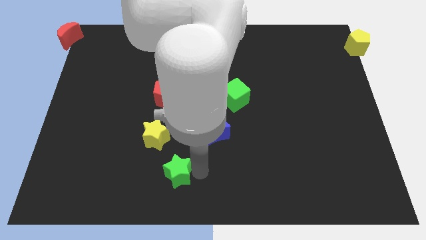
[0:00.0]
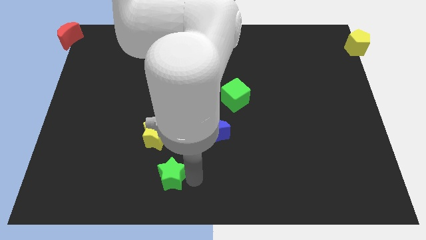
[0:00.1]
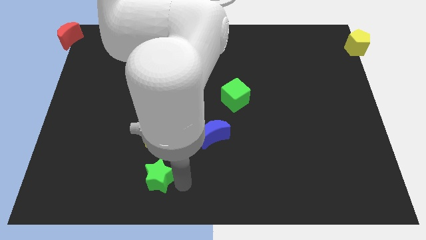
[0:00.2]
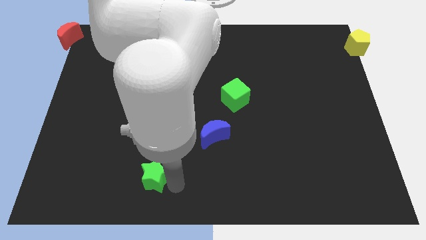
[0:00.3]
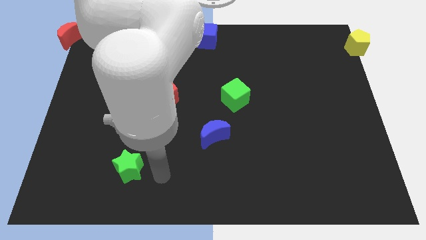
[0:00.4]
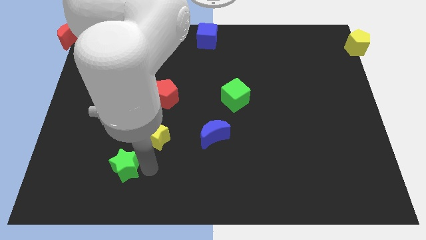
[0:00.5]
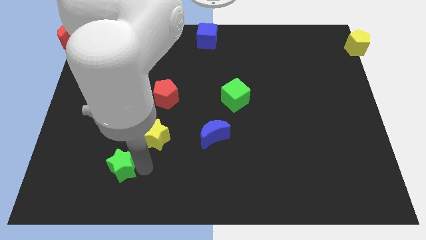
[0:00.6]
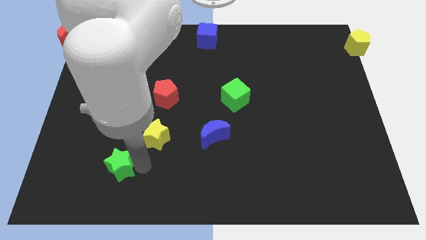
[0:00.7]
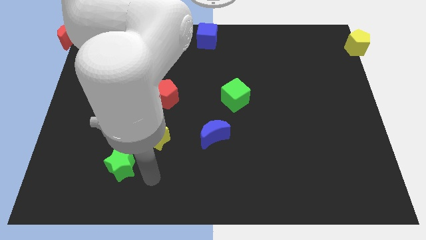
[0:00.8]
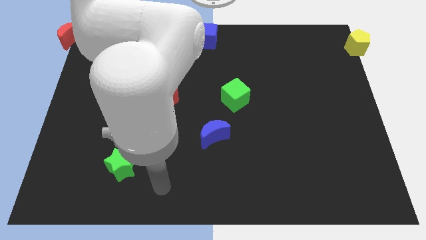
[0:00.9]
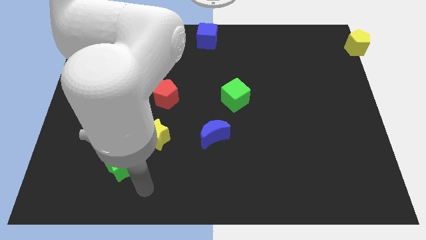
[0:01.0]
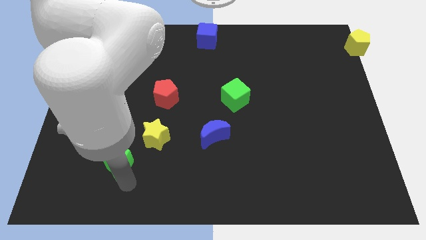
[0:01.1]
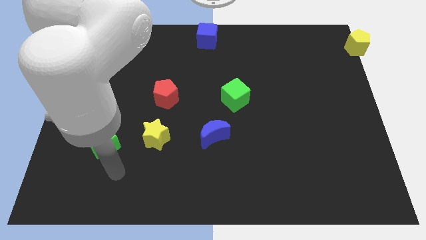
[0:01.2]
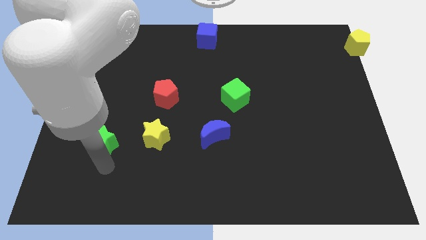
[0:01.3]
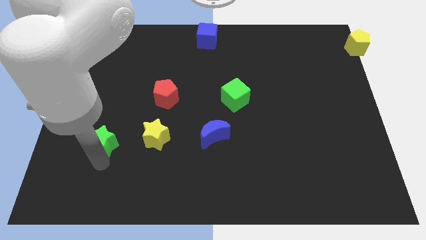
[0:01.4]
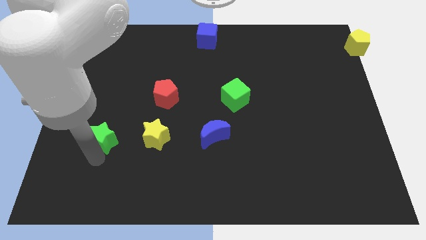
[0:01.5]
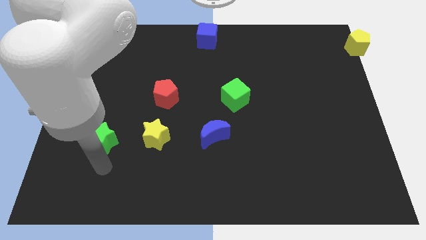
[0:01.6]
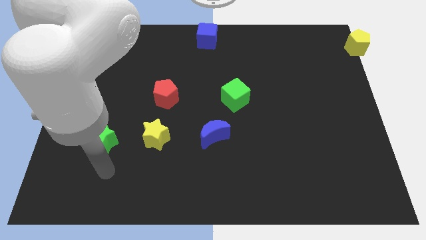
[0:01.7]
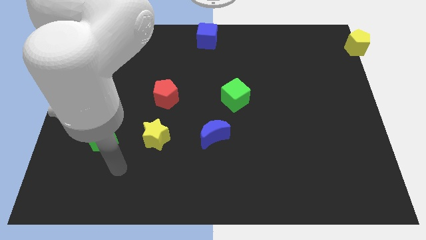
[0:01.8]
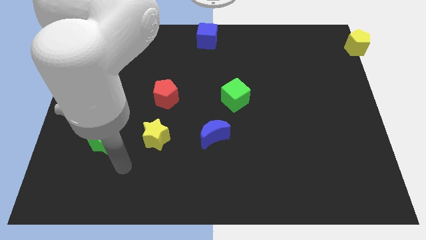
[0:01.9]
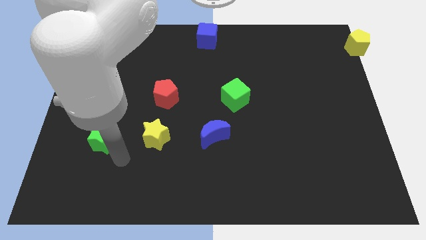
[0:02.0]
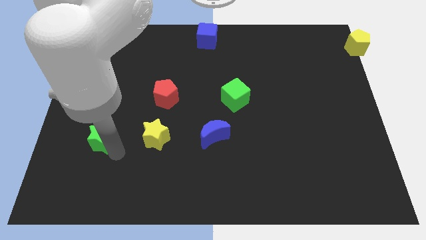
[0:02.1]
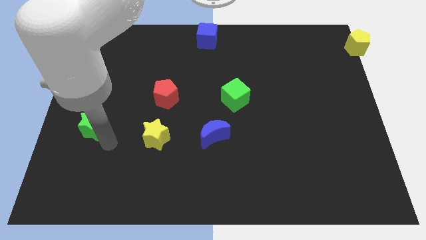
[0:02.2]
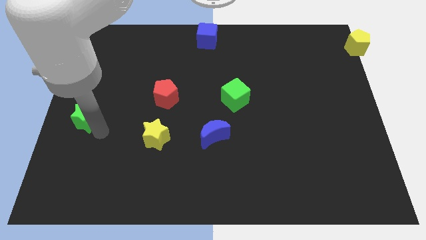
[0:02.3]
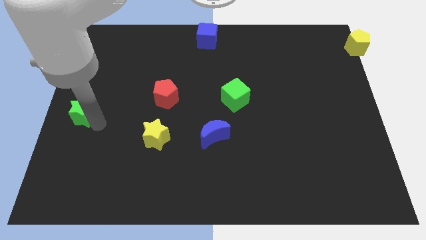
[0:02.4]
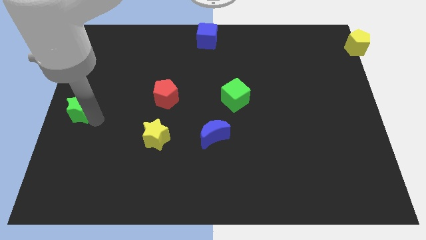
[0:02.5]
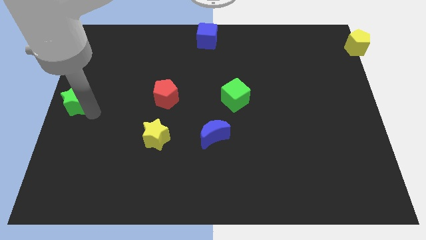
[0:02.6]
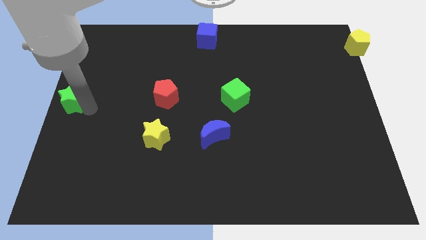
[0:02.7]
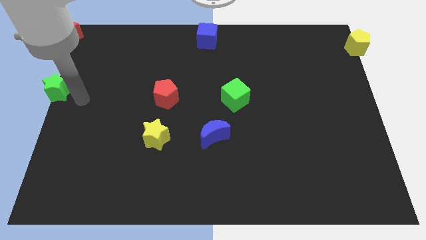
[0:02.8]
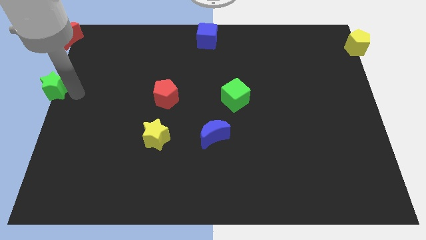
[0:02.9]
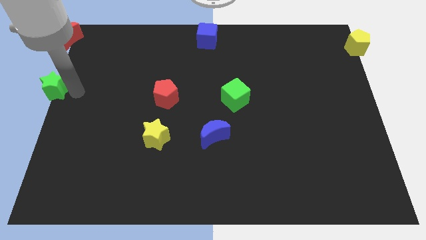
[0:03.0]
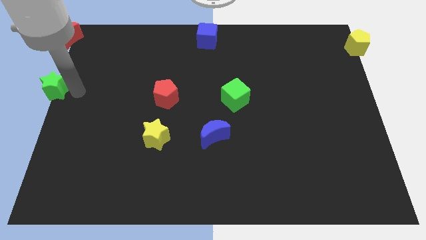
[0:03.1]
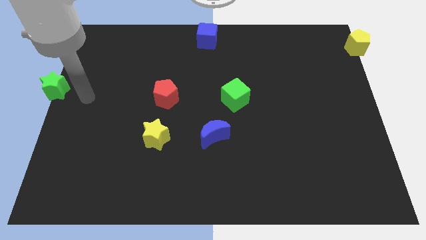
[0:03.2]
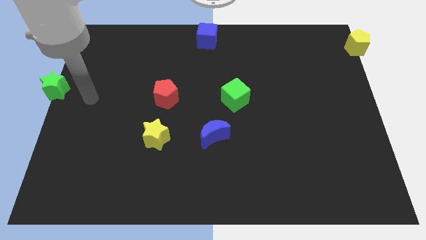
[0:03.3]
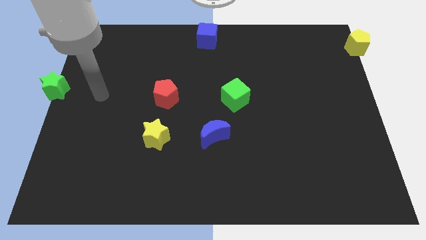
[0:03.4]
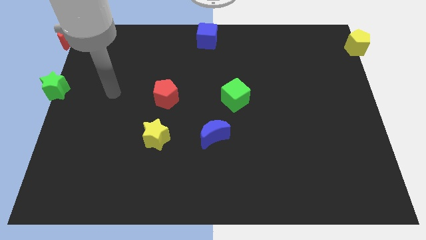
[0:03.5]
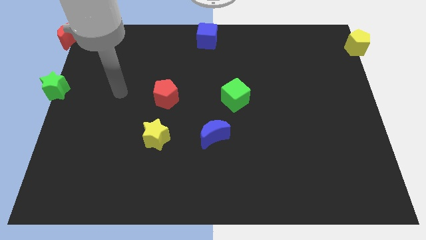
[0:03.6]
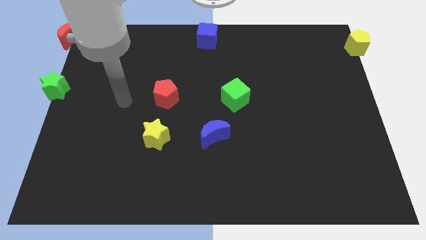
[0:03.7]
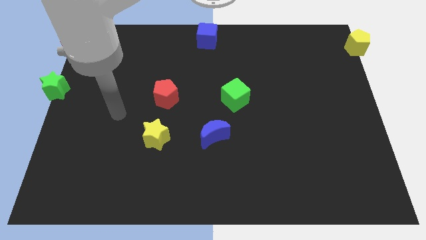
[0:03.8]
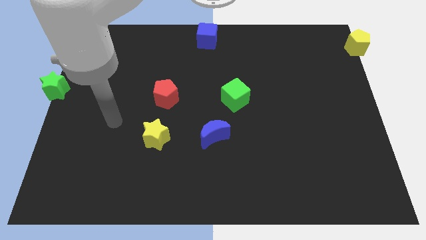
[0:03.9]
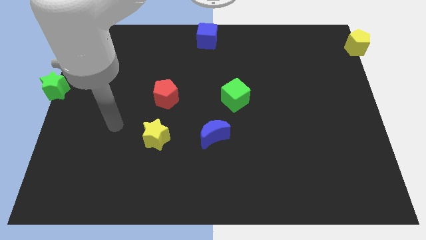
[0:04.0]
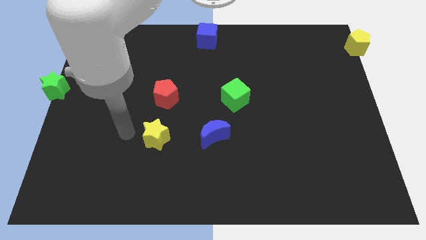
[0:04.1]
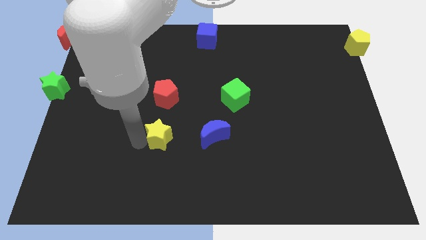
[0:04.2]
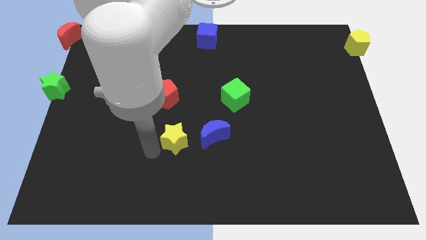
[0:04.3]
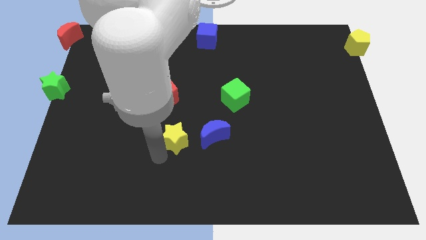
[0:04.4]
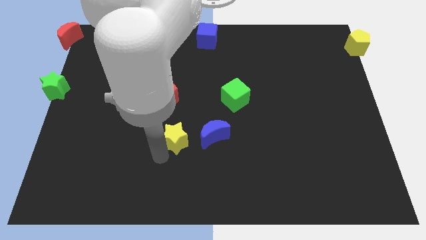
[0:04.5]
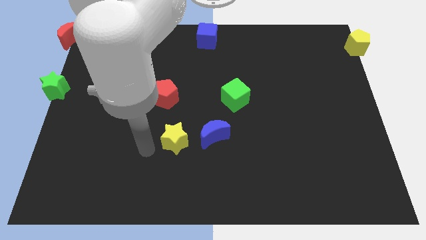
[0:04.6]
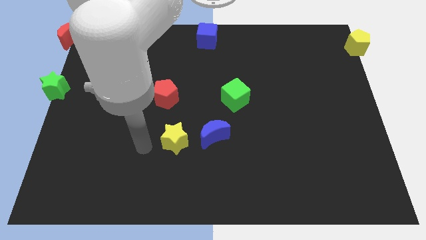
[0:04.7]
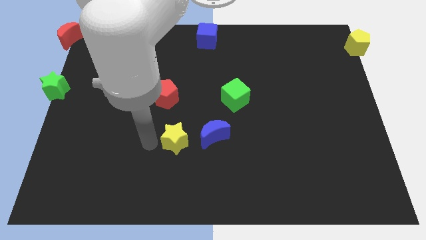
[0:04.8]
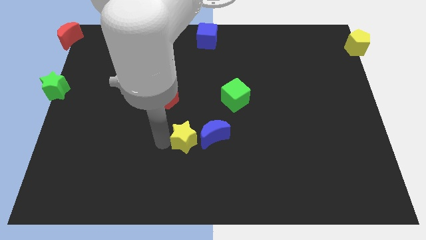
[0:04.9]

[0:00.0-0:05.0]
put the green star at the center left of the board

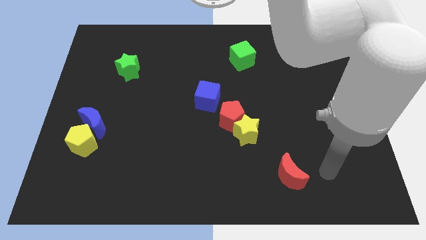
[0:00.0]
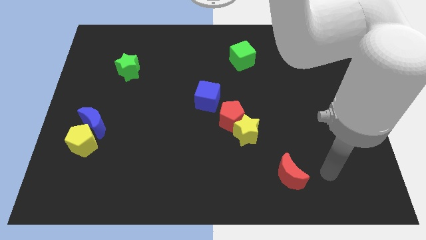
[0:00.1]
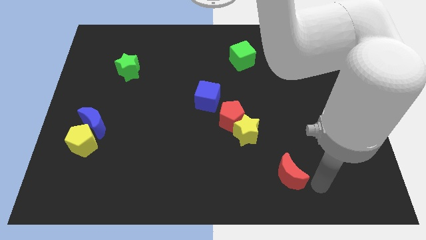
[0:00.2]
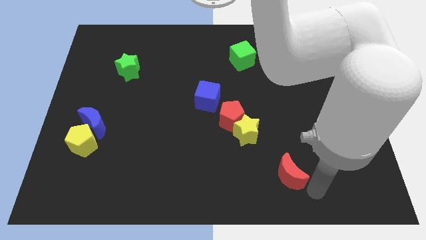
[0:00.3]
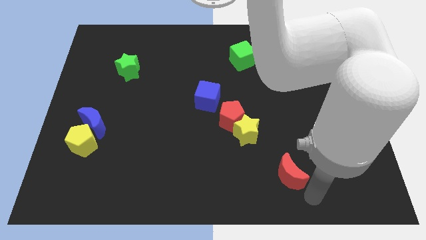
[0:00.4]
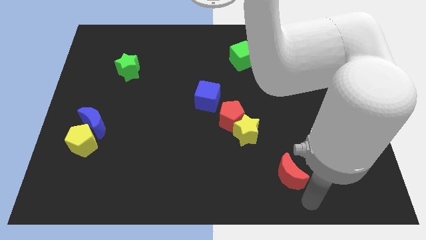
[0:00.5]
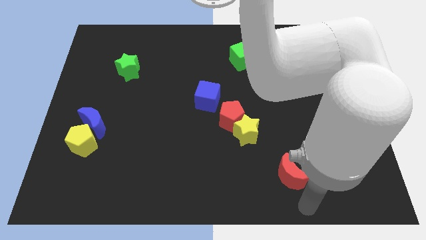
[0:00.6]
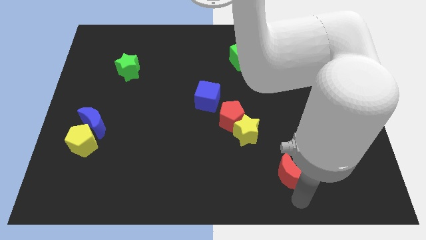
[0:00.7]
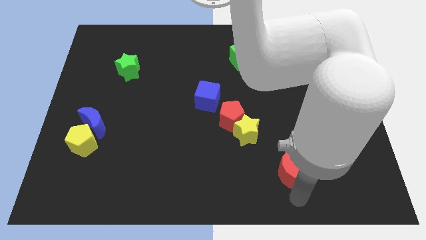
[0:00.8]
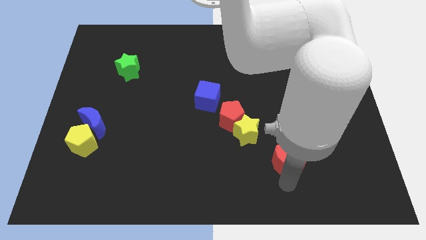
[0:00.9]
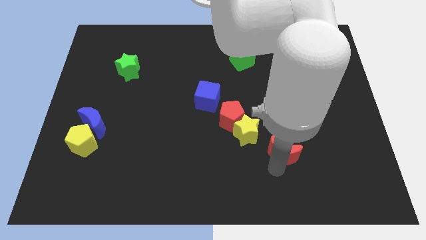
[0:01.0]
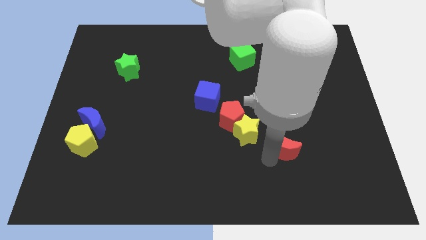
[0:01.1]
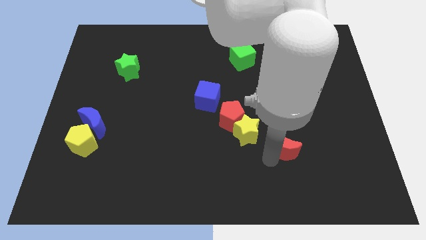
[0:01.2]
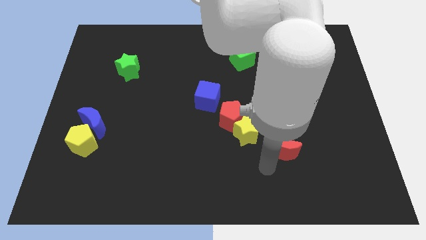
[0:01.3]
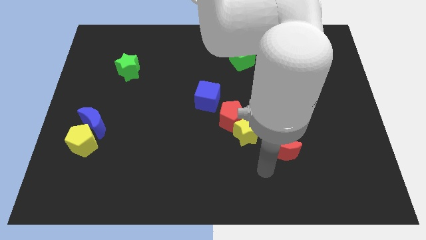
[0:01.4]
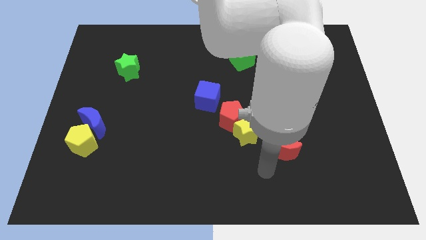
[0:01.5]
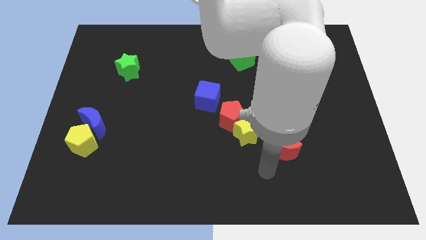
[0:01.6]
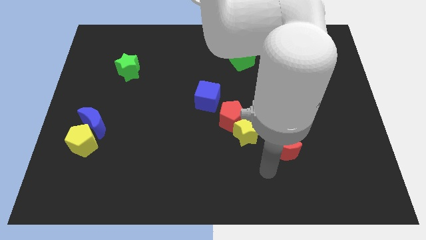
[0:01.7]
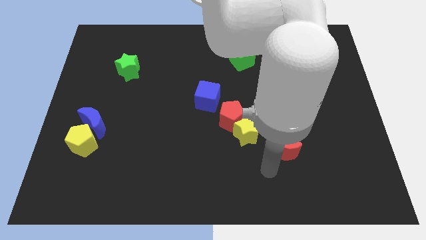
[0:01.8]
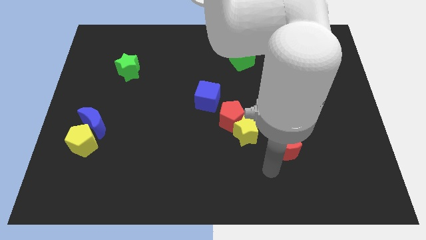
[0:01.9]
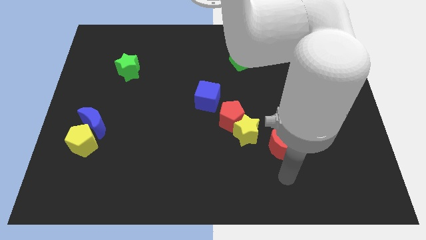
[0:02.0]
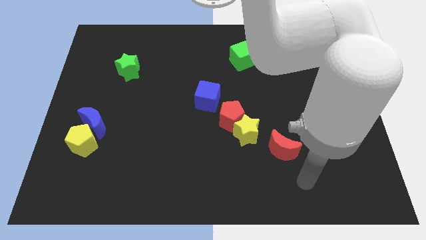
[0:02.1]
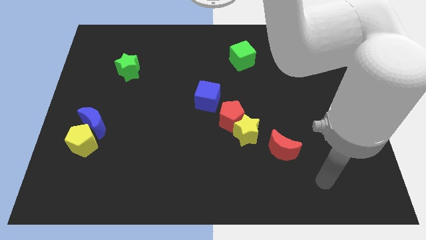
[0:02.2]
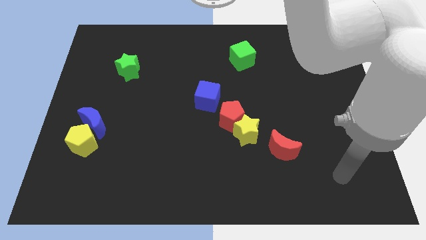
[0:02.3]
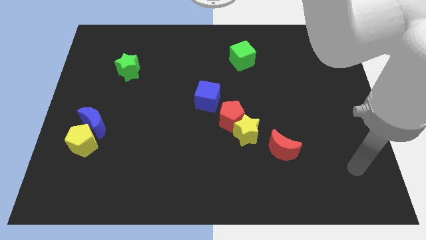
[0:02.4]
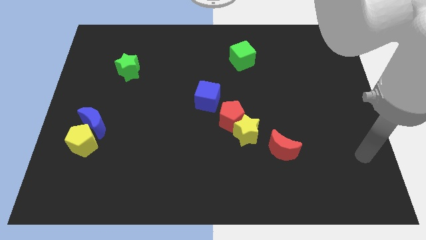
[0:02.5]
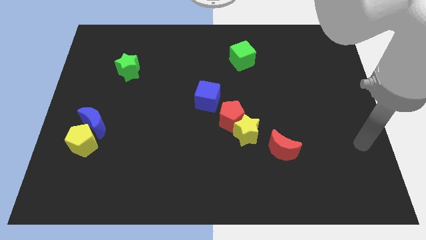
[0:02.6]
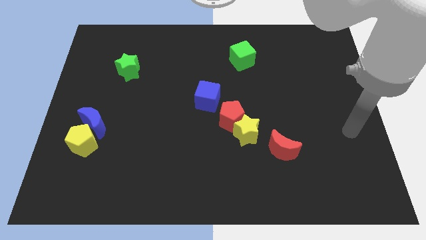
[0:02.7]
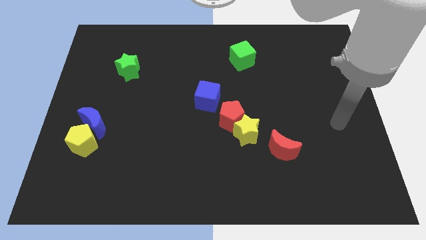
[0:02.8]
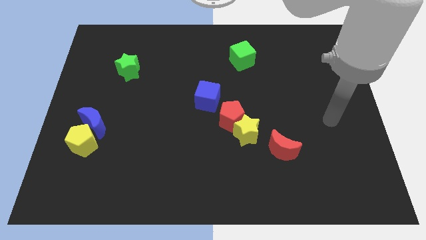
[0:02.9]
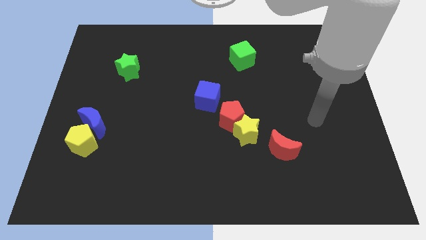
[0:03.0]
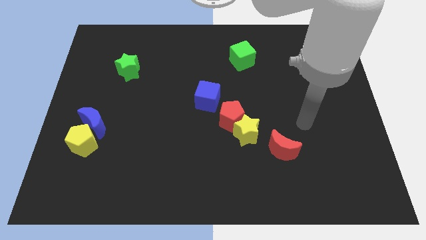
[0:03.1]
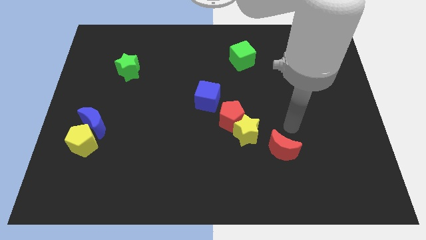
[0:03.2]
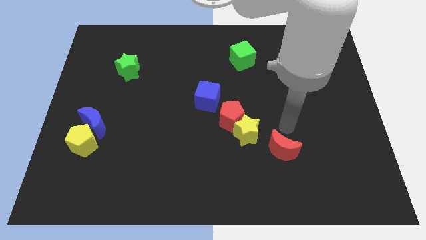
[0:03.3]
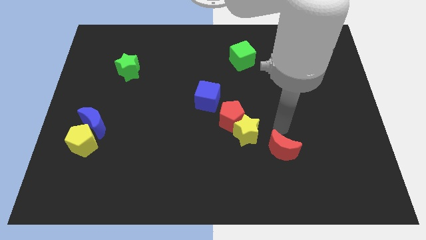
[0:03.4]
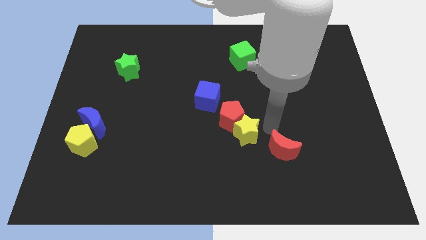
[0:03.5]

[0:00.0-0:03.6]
move the red moon diagonally to the bottom right of the yellow star

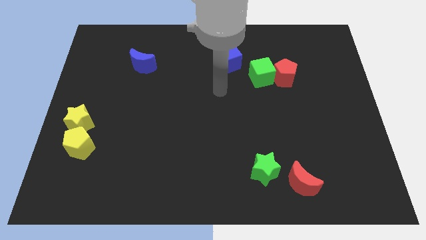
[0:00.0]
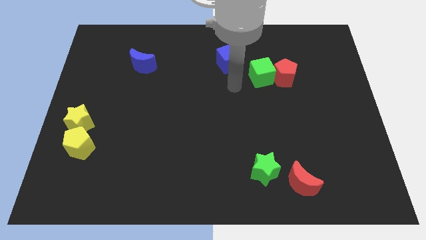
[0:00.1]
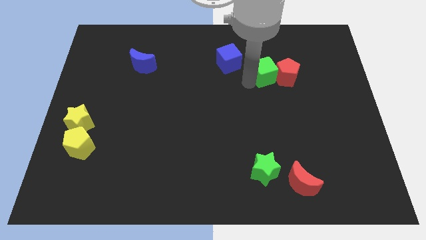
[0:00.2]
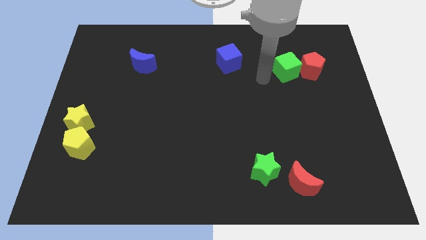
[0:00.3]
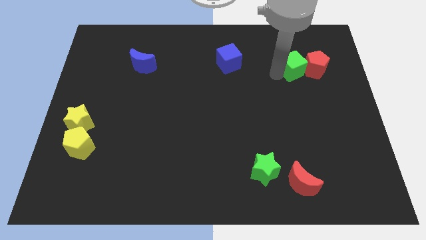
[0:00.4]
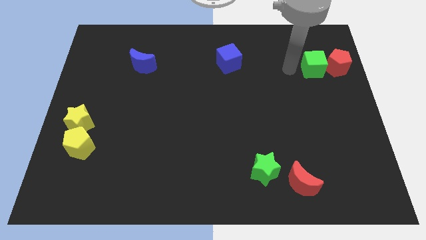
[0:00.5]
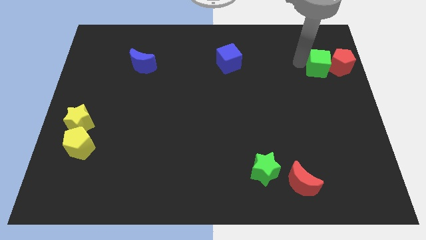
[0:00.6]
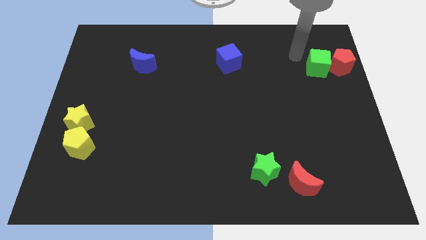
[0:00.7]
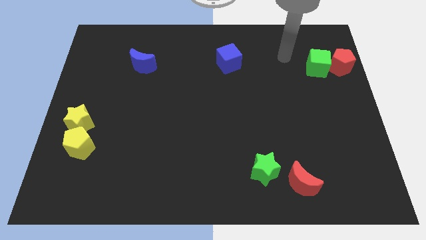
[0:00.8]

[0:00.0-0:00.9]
push the green cube and red pentagon to the right
